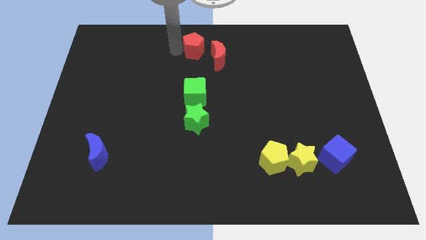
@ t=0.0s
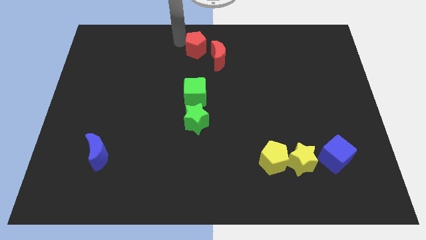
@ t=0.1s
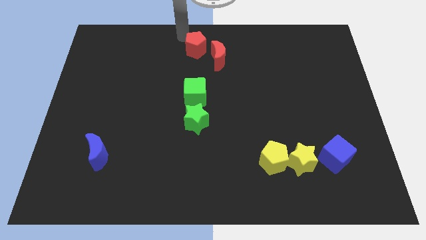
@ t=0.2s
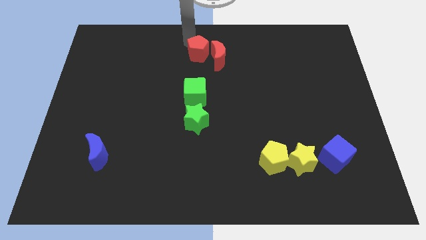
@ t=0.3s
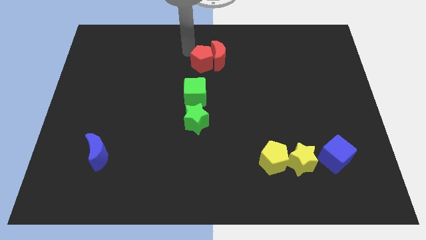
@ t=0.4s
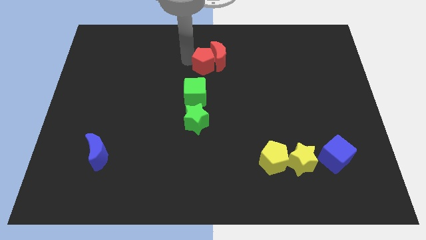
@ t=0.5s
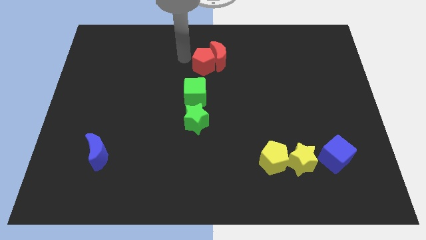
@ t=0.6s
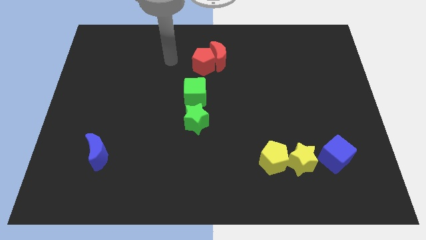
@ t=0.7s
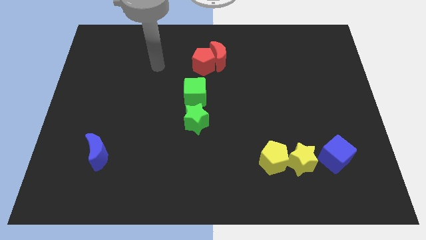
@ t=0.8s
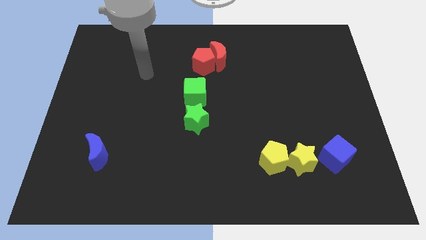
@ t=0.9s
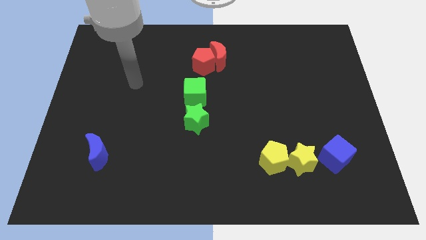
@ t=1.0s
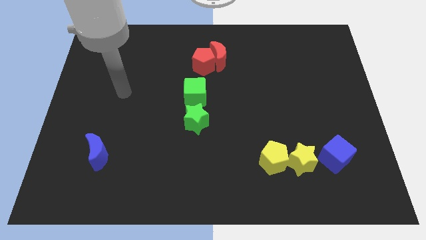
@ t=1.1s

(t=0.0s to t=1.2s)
push the red pentagon into the red moon

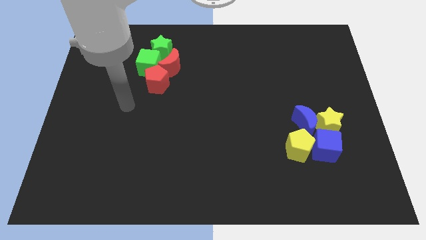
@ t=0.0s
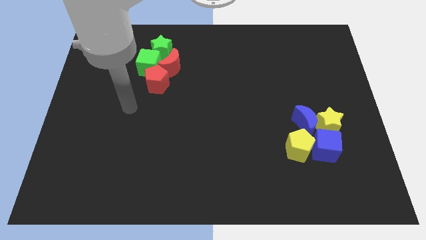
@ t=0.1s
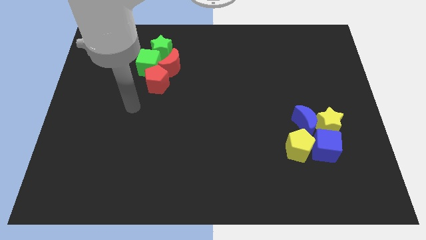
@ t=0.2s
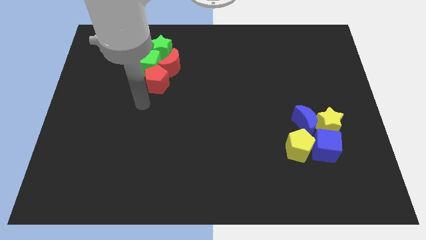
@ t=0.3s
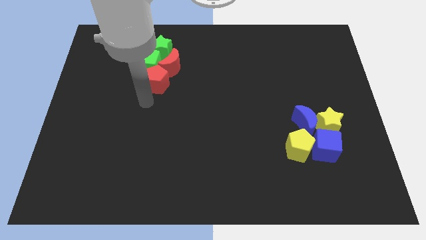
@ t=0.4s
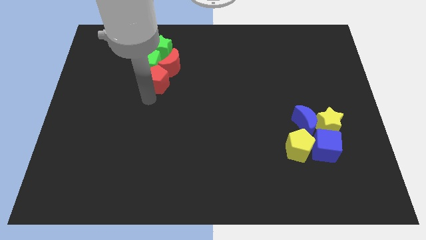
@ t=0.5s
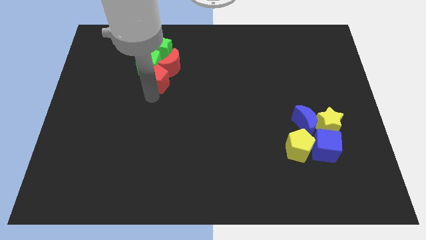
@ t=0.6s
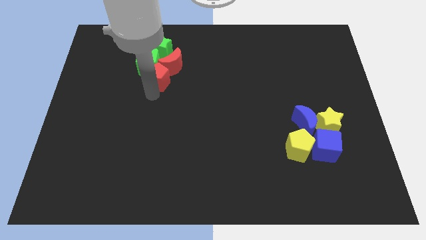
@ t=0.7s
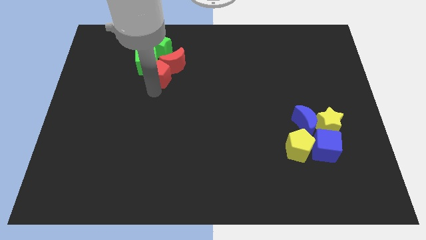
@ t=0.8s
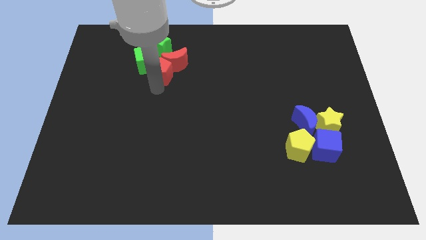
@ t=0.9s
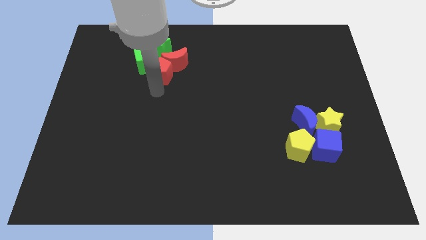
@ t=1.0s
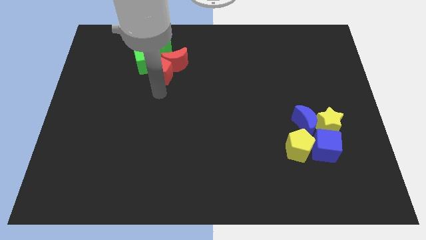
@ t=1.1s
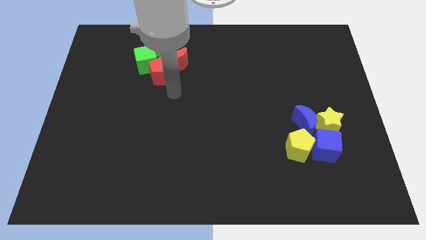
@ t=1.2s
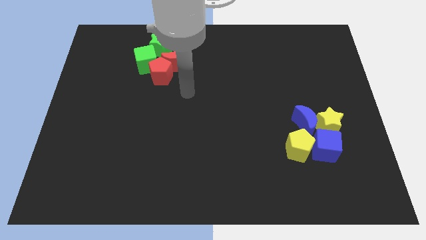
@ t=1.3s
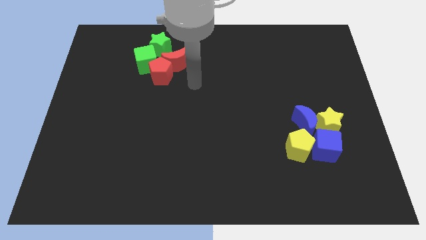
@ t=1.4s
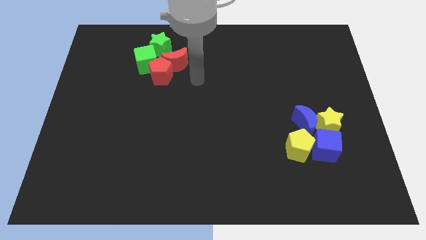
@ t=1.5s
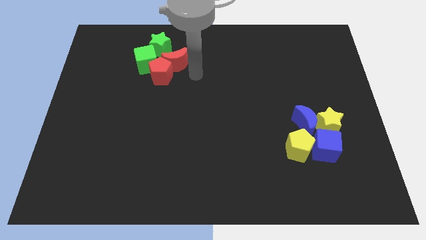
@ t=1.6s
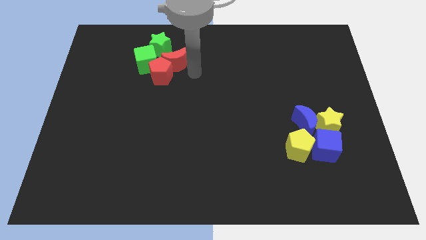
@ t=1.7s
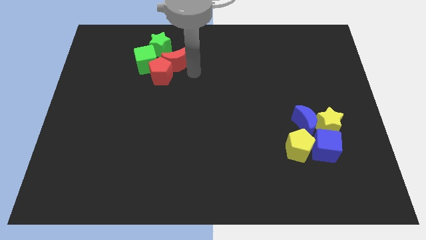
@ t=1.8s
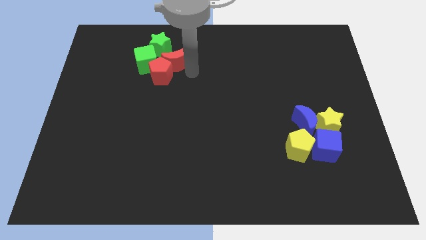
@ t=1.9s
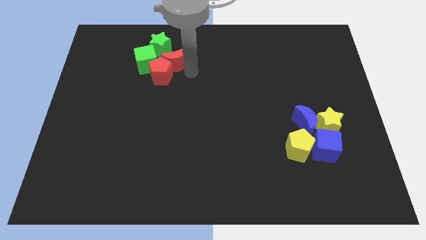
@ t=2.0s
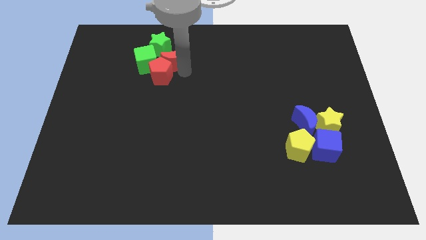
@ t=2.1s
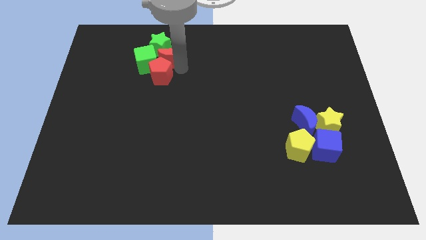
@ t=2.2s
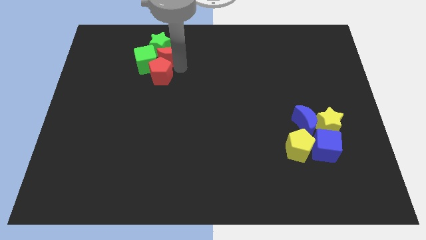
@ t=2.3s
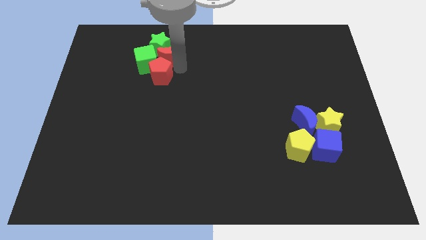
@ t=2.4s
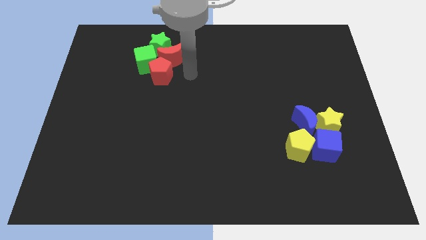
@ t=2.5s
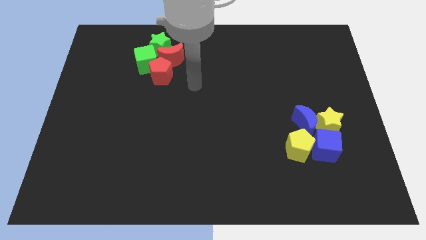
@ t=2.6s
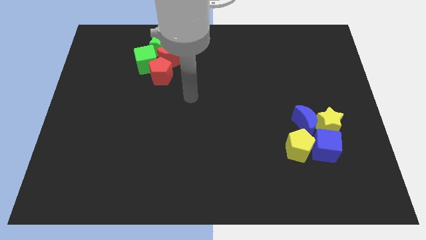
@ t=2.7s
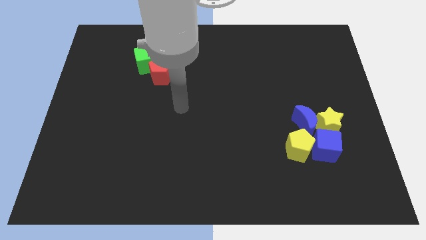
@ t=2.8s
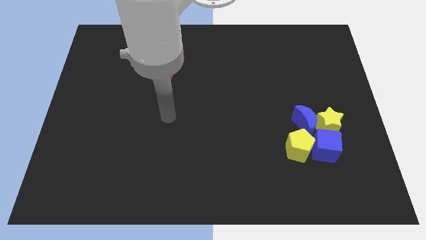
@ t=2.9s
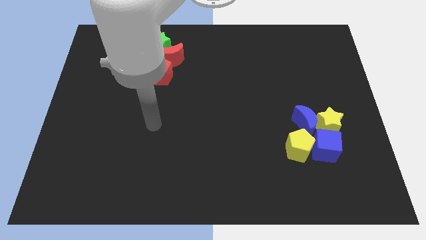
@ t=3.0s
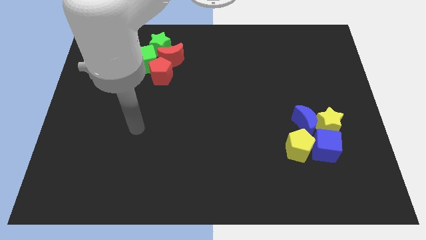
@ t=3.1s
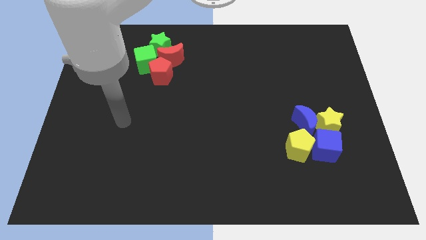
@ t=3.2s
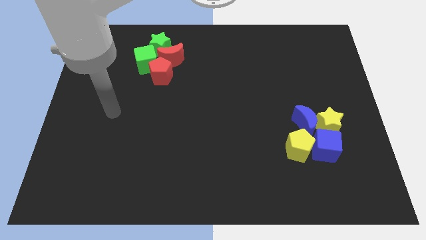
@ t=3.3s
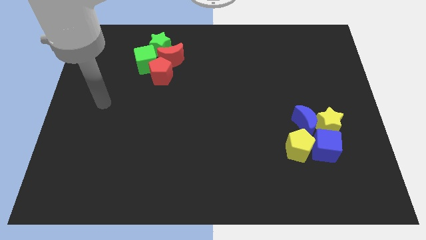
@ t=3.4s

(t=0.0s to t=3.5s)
move the red moon slightly to the left side

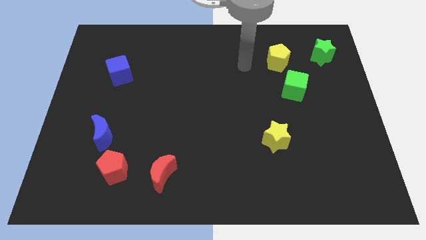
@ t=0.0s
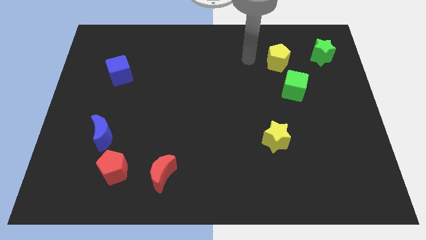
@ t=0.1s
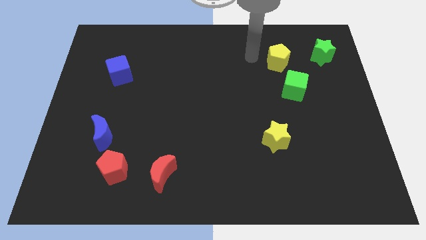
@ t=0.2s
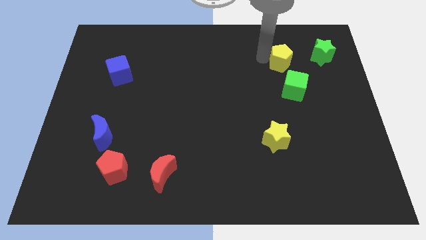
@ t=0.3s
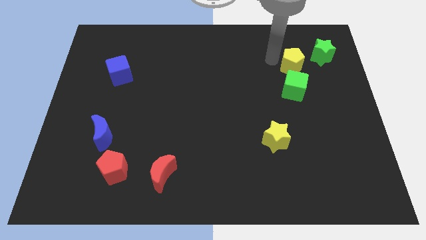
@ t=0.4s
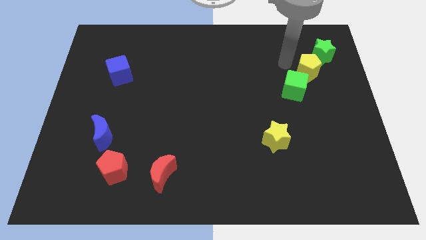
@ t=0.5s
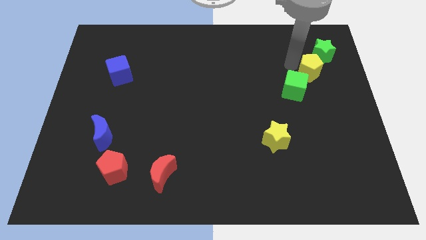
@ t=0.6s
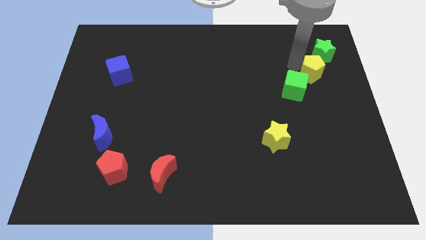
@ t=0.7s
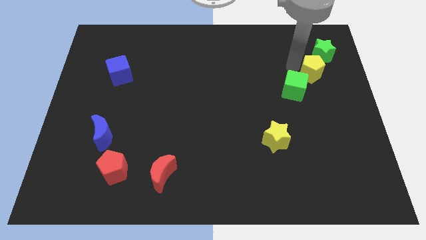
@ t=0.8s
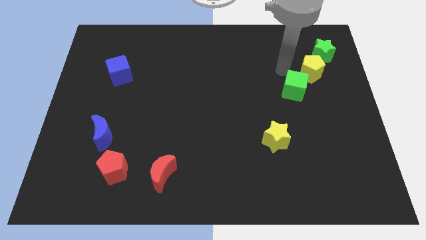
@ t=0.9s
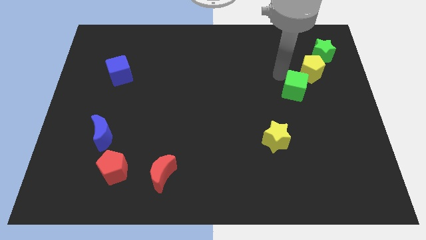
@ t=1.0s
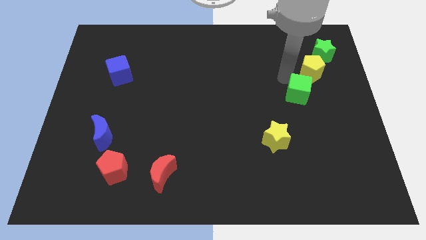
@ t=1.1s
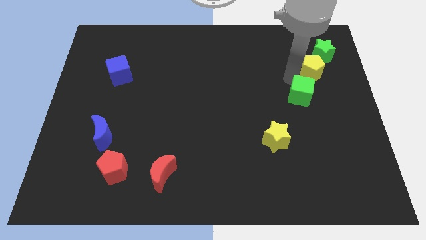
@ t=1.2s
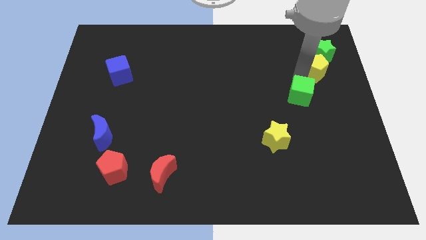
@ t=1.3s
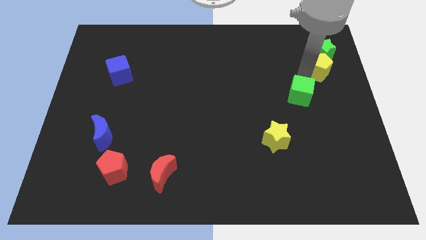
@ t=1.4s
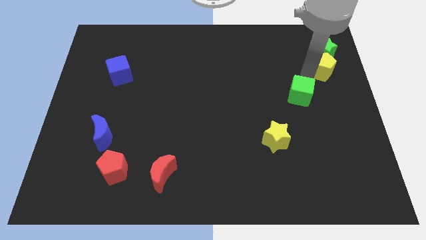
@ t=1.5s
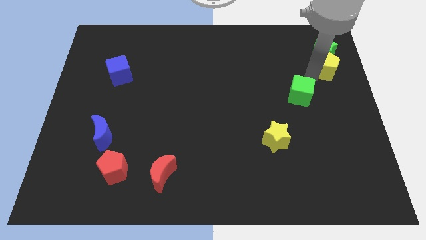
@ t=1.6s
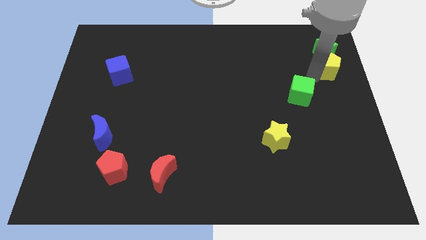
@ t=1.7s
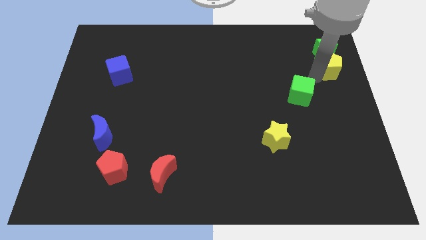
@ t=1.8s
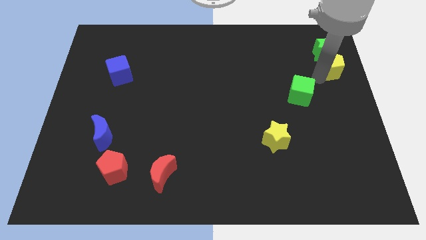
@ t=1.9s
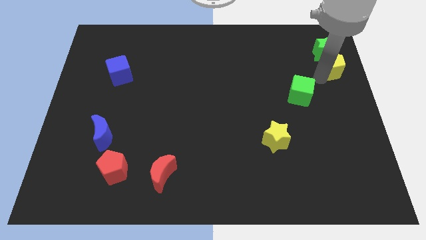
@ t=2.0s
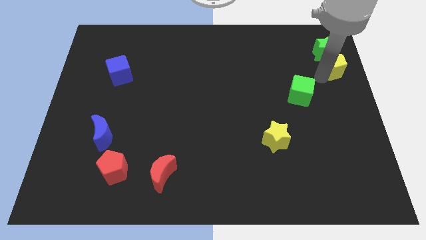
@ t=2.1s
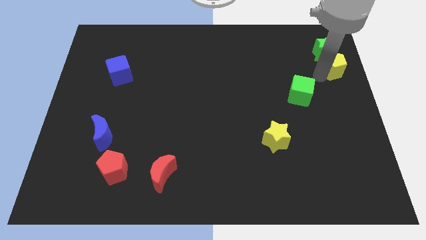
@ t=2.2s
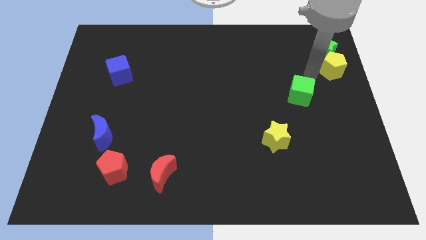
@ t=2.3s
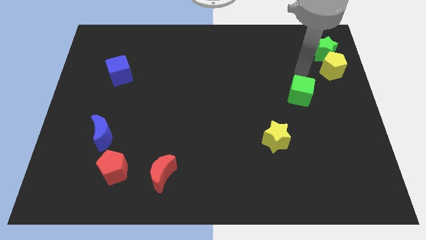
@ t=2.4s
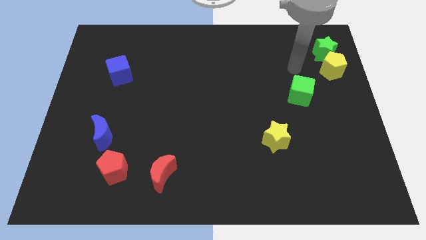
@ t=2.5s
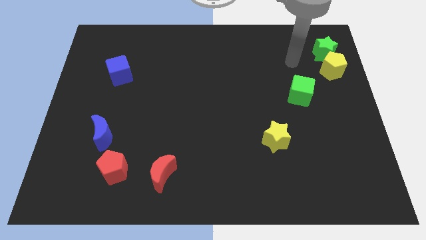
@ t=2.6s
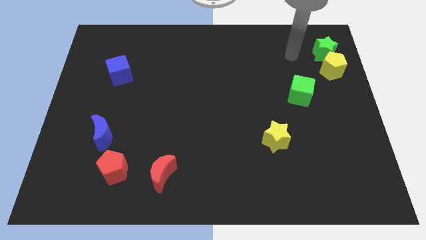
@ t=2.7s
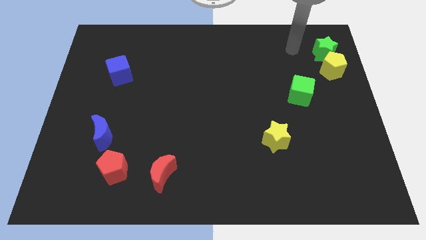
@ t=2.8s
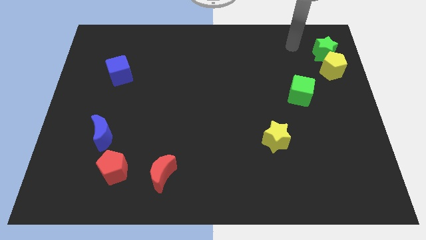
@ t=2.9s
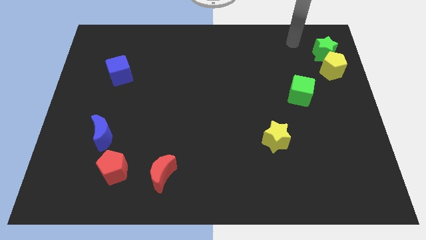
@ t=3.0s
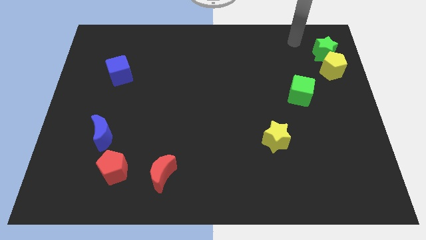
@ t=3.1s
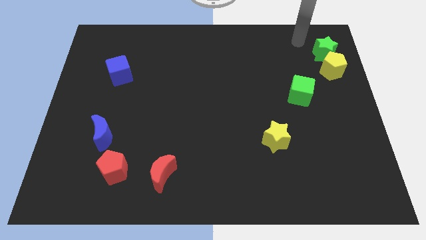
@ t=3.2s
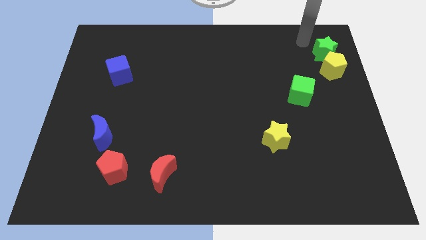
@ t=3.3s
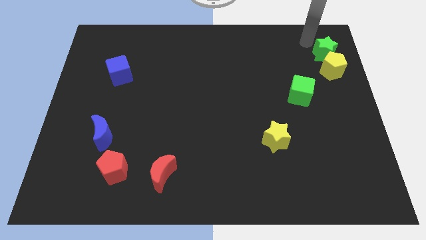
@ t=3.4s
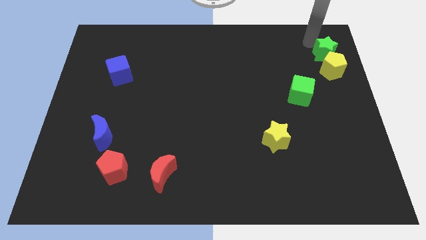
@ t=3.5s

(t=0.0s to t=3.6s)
move the yellow pentagon below to the green star

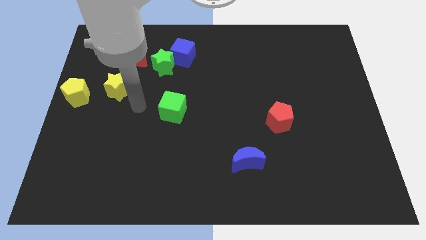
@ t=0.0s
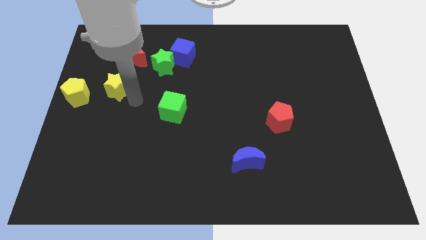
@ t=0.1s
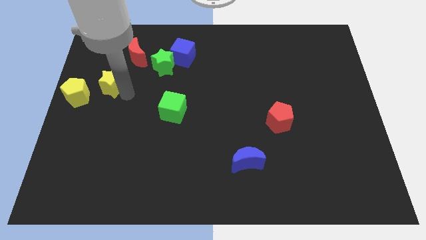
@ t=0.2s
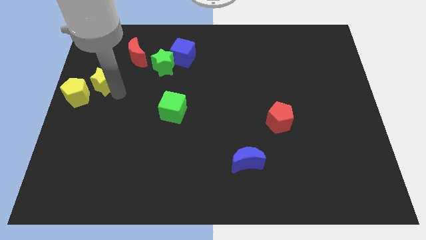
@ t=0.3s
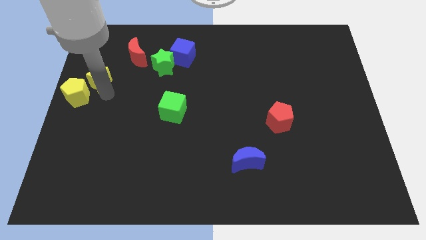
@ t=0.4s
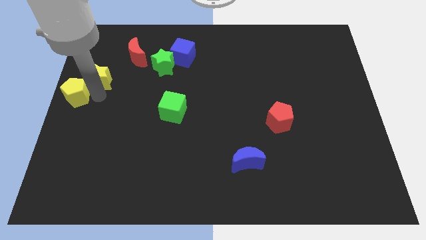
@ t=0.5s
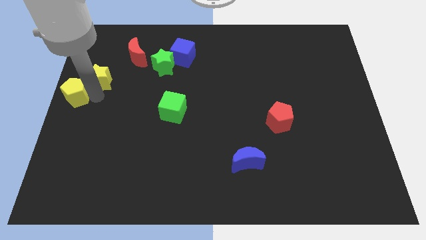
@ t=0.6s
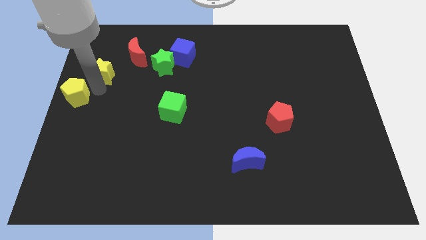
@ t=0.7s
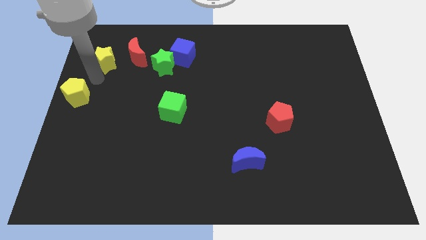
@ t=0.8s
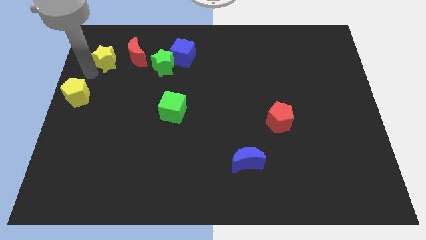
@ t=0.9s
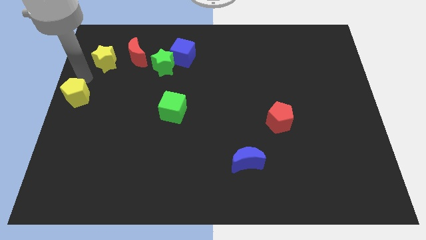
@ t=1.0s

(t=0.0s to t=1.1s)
move yellow star to the left of the red crescent
